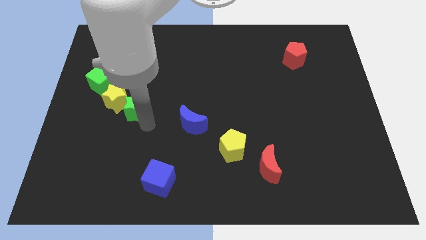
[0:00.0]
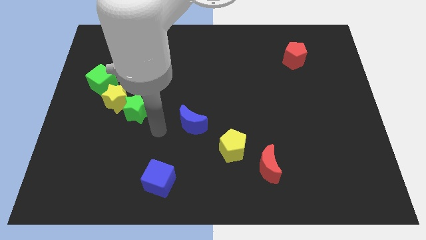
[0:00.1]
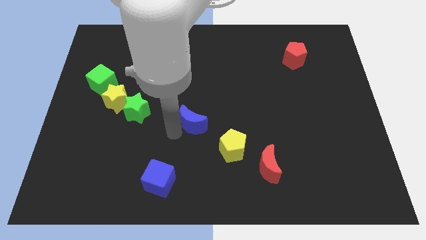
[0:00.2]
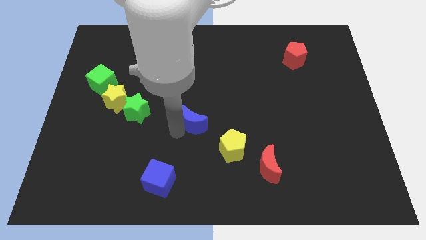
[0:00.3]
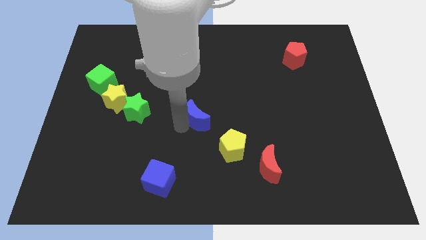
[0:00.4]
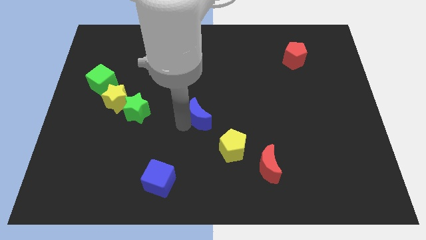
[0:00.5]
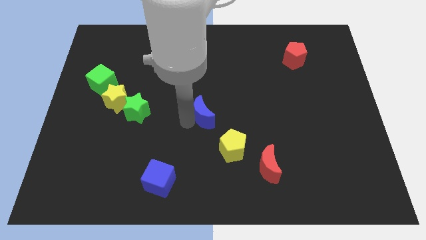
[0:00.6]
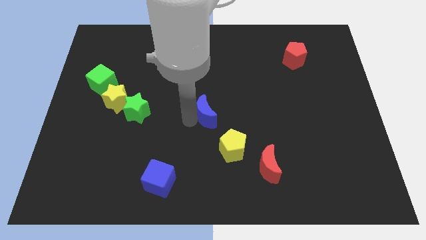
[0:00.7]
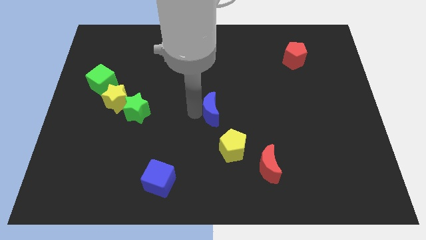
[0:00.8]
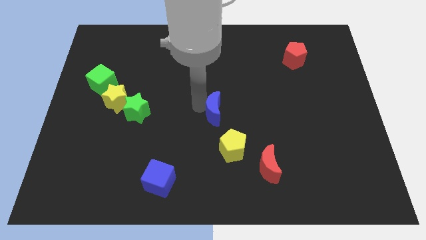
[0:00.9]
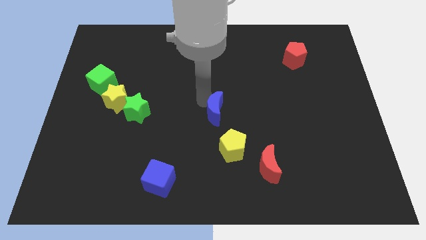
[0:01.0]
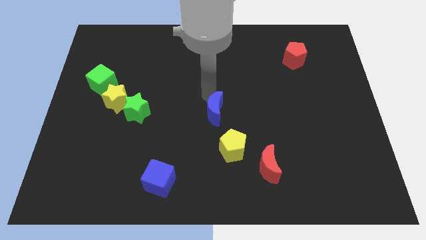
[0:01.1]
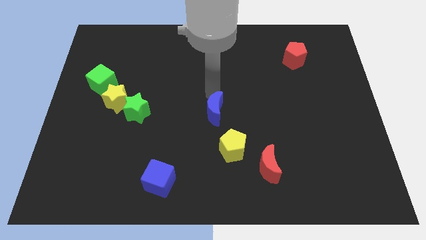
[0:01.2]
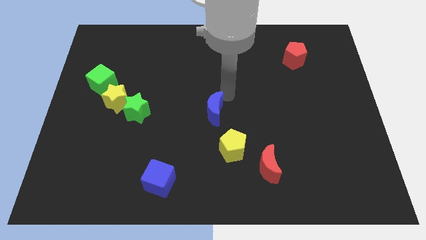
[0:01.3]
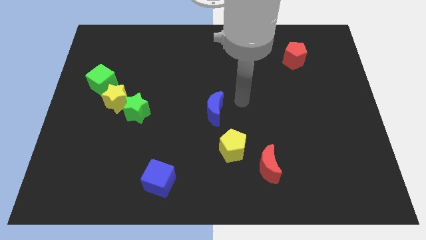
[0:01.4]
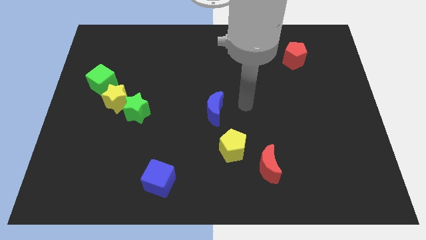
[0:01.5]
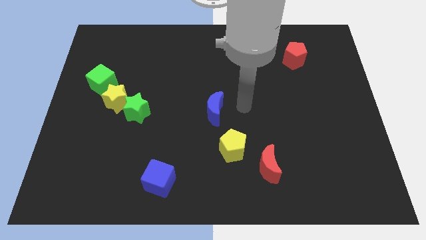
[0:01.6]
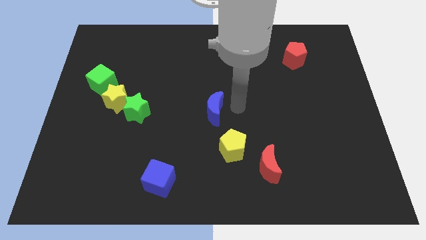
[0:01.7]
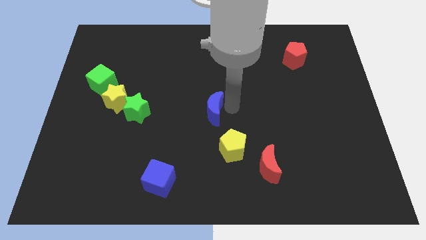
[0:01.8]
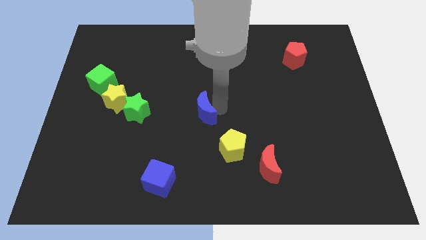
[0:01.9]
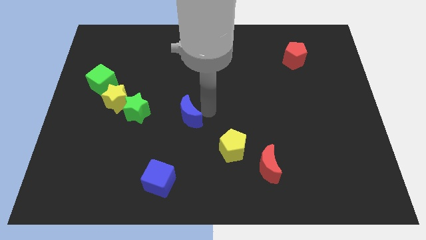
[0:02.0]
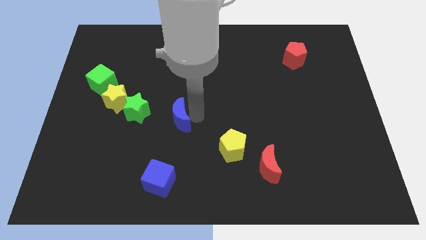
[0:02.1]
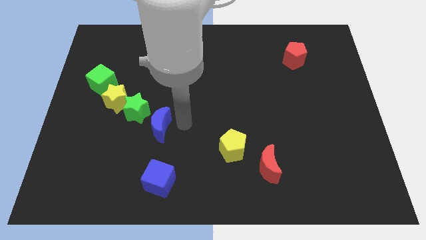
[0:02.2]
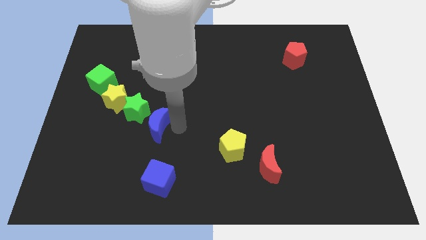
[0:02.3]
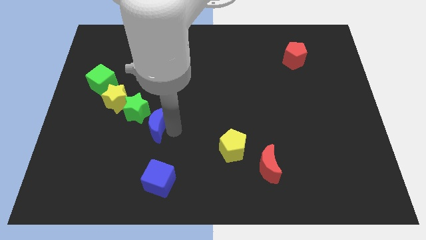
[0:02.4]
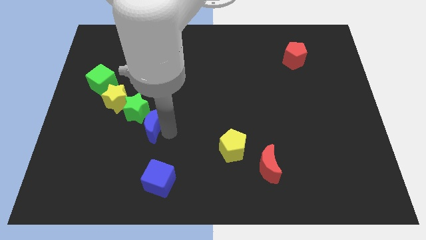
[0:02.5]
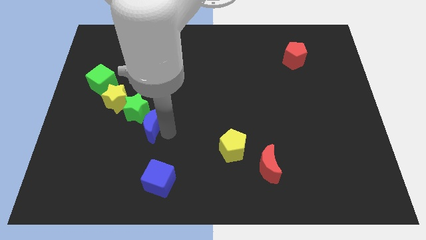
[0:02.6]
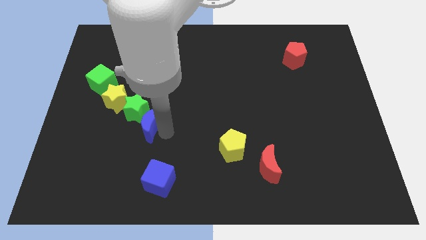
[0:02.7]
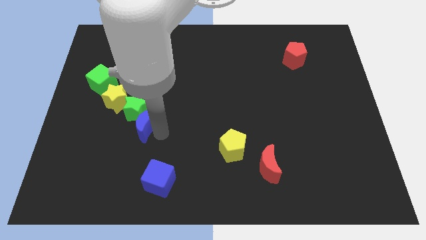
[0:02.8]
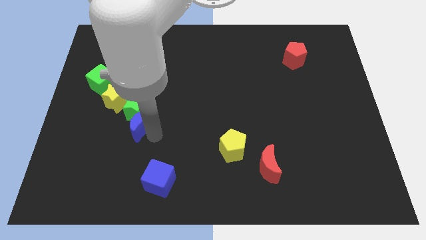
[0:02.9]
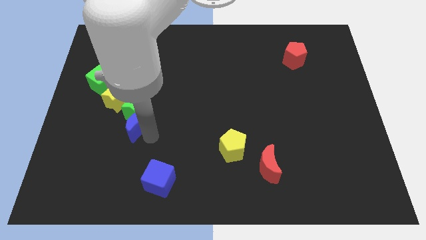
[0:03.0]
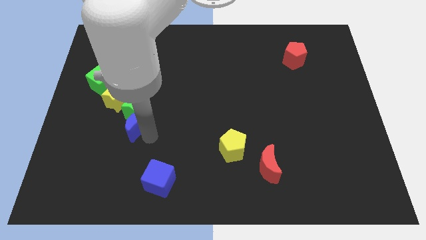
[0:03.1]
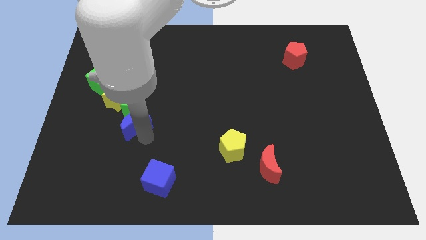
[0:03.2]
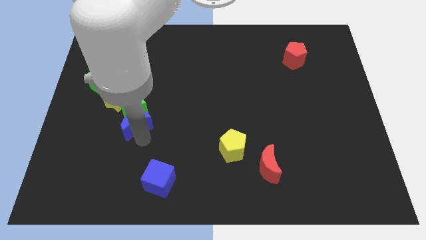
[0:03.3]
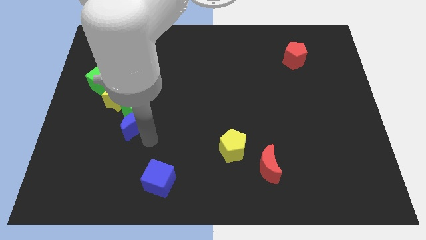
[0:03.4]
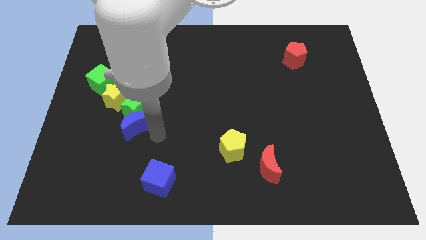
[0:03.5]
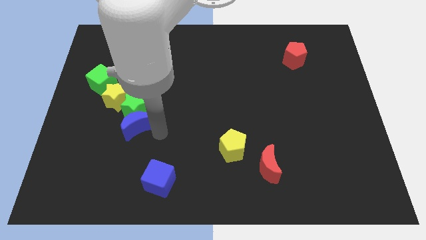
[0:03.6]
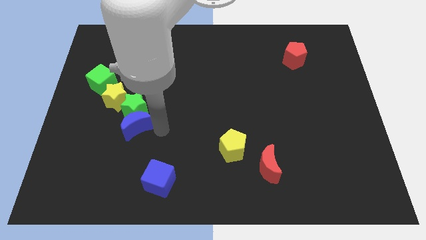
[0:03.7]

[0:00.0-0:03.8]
place the blue crescent to the right of the green star

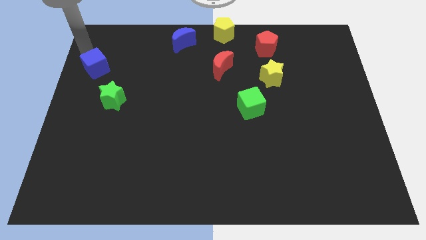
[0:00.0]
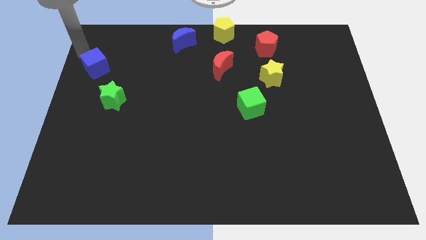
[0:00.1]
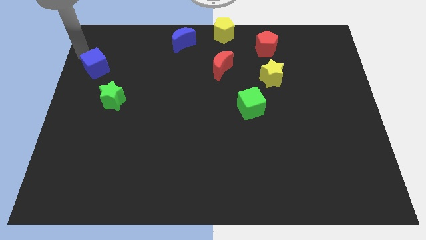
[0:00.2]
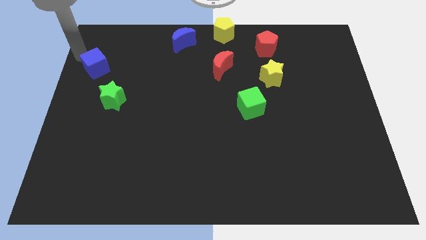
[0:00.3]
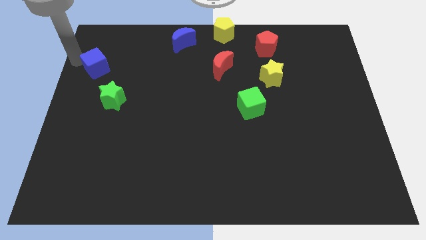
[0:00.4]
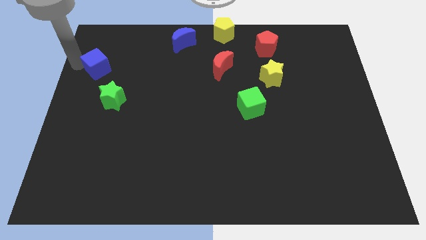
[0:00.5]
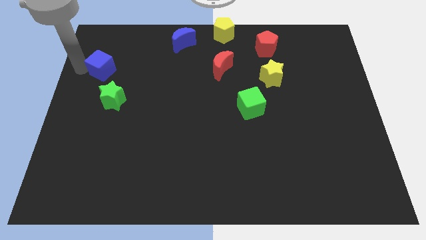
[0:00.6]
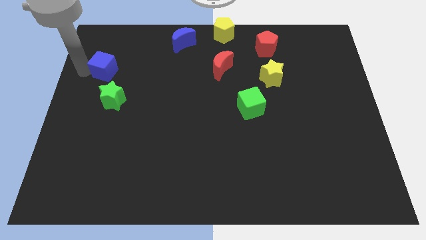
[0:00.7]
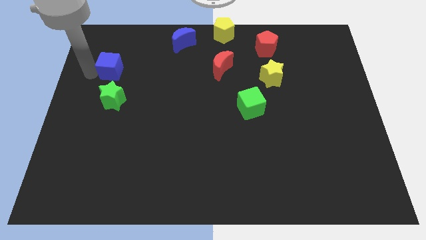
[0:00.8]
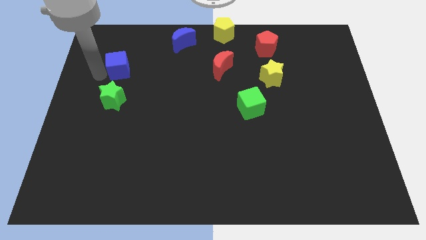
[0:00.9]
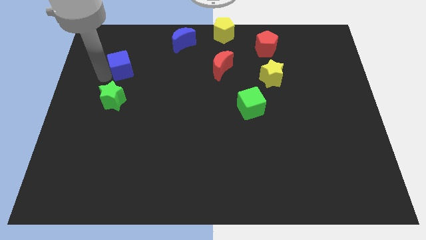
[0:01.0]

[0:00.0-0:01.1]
place the blue cube above the green star

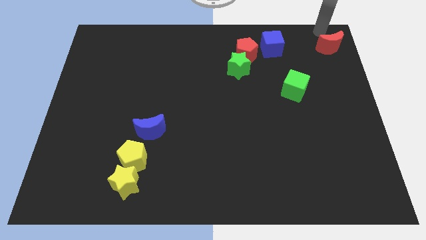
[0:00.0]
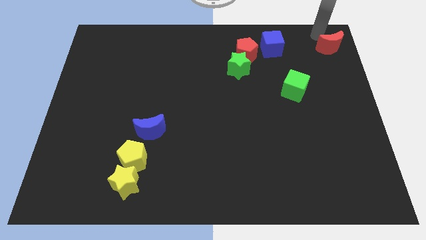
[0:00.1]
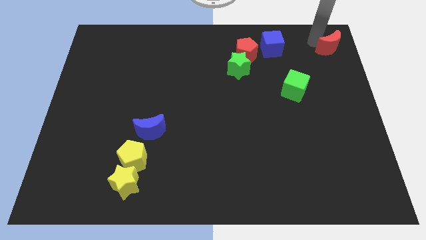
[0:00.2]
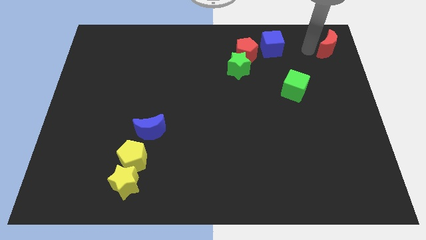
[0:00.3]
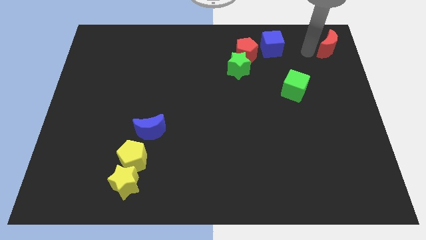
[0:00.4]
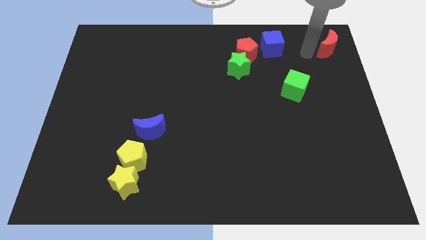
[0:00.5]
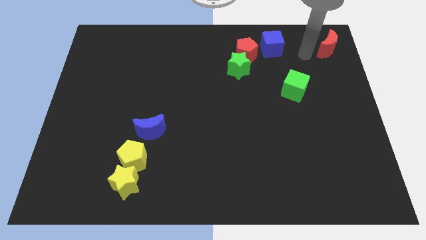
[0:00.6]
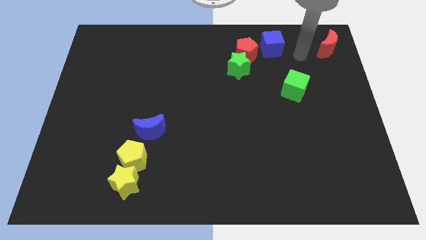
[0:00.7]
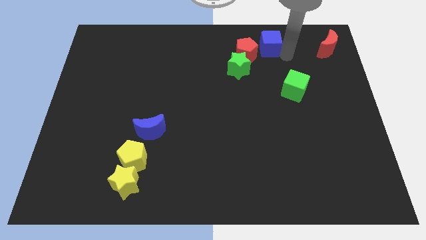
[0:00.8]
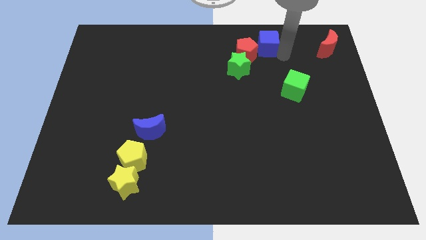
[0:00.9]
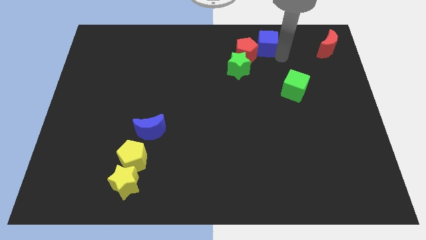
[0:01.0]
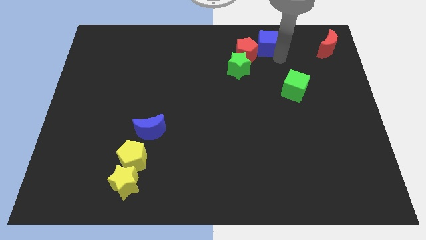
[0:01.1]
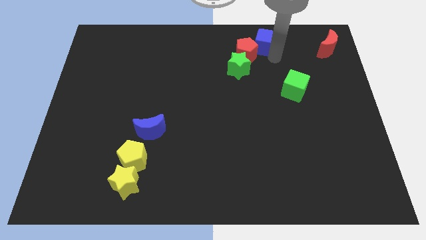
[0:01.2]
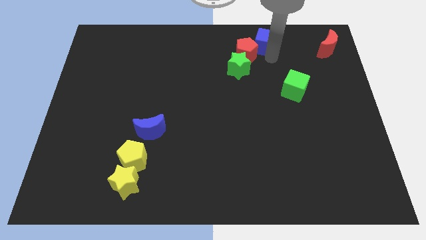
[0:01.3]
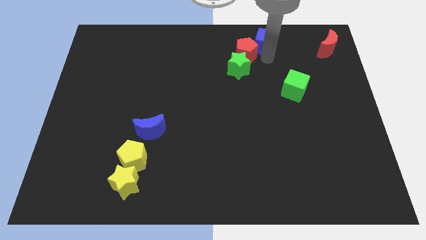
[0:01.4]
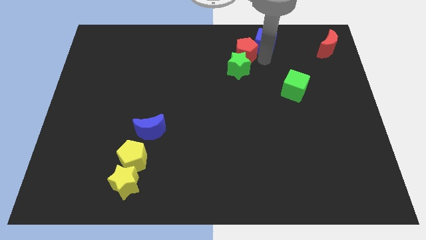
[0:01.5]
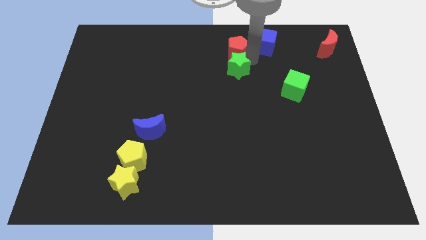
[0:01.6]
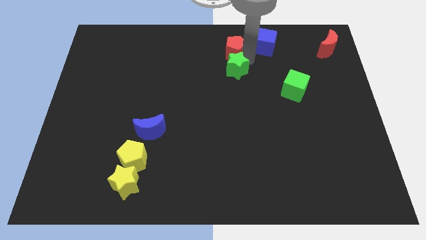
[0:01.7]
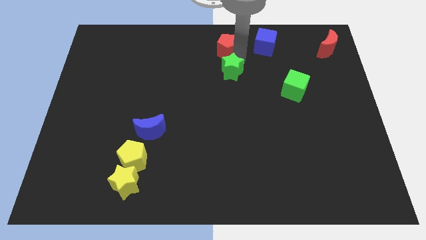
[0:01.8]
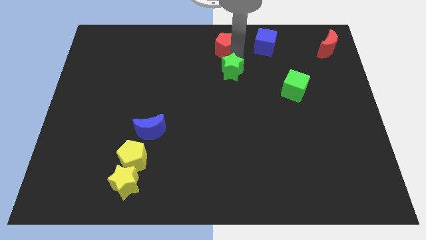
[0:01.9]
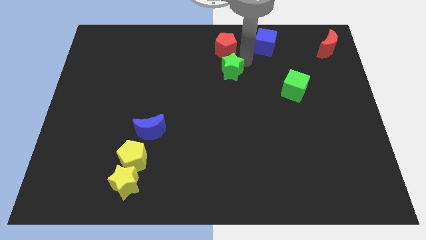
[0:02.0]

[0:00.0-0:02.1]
move the blue cube diagonally to the red pentagon

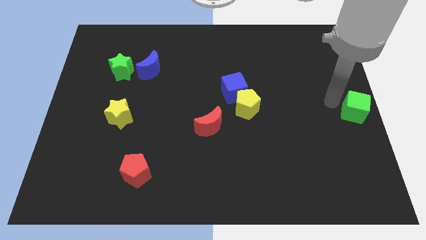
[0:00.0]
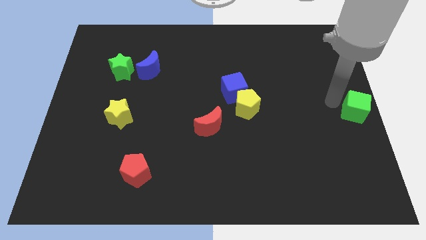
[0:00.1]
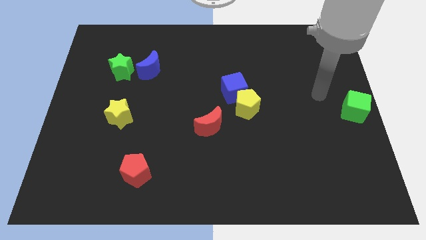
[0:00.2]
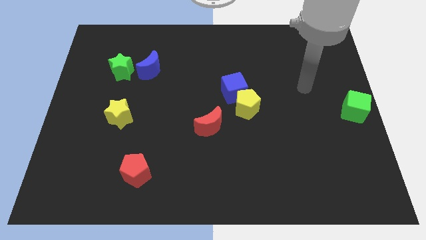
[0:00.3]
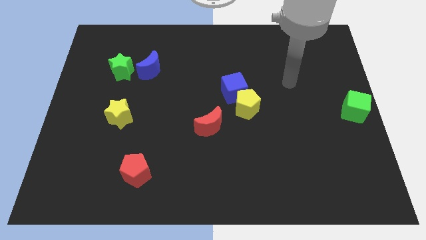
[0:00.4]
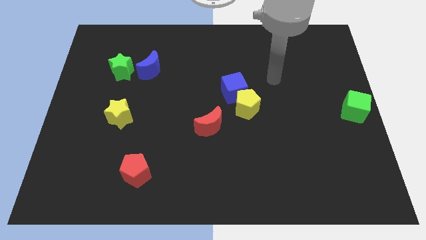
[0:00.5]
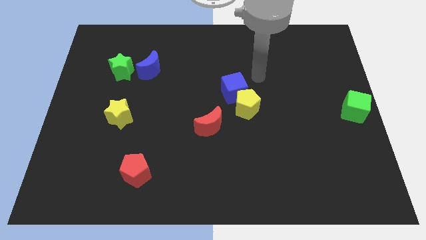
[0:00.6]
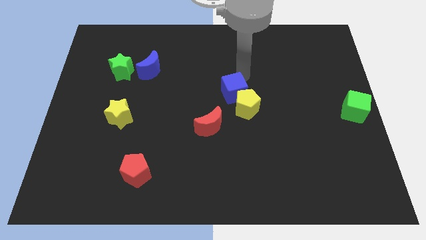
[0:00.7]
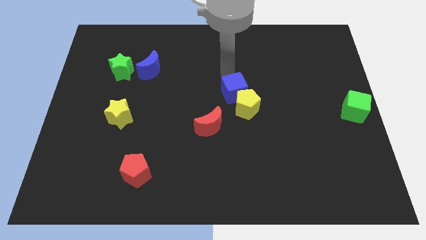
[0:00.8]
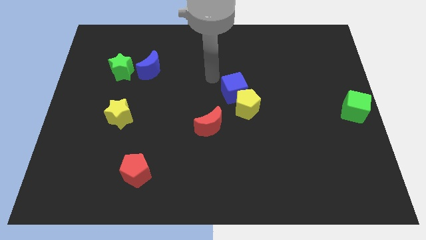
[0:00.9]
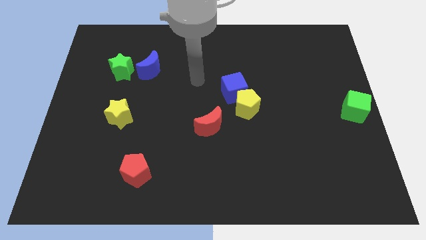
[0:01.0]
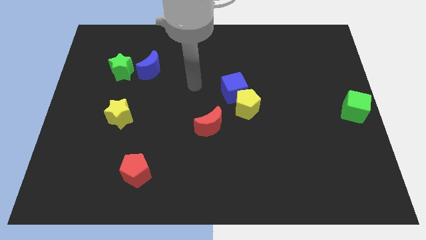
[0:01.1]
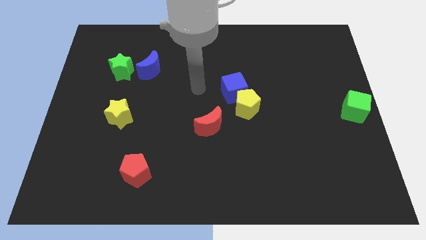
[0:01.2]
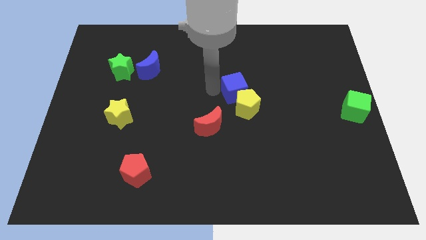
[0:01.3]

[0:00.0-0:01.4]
move your arm away from the green block

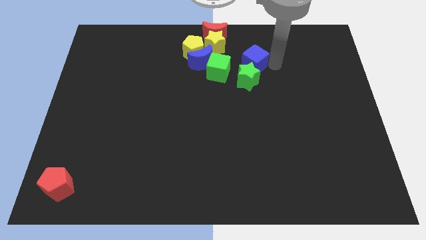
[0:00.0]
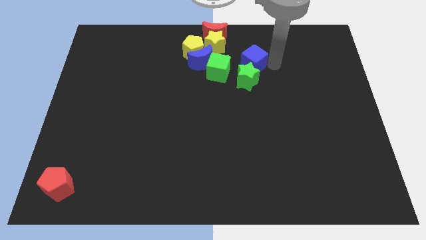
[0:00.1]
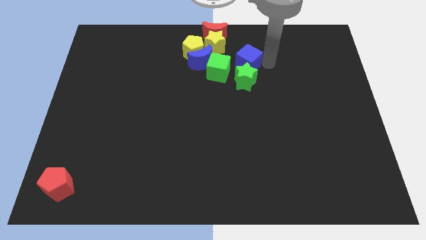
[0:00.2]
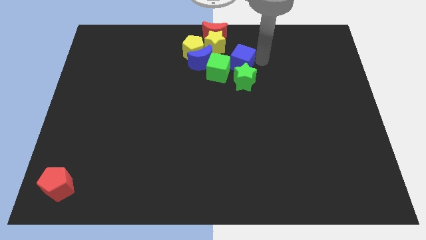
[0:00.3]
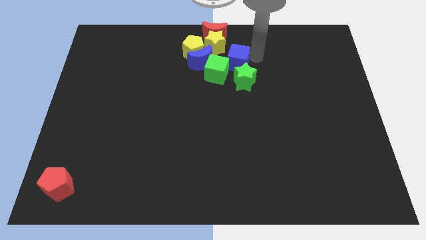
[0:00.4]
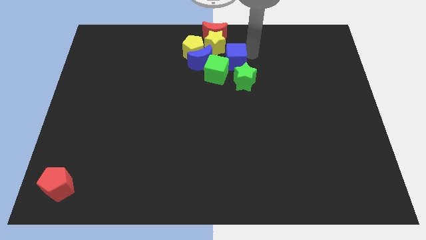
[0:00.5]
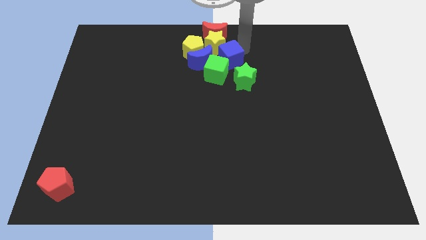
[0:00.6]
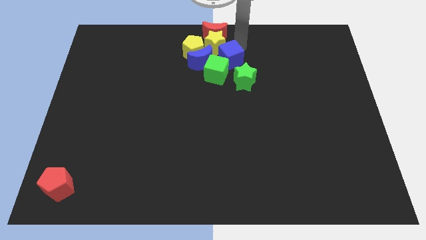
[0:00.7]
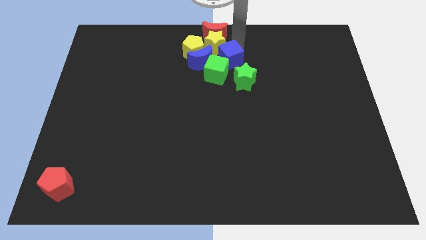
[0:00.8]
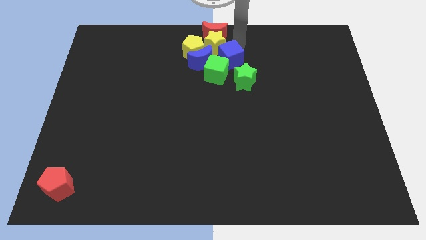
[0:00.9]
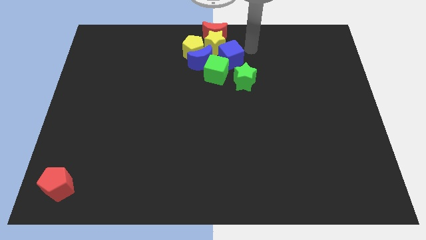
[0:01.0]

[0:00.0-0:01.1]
move the blue cube into the group of blocks
